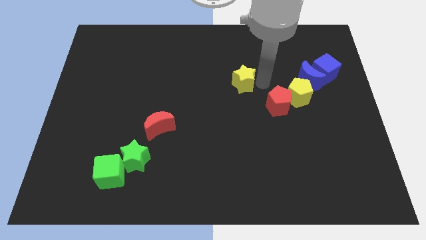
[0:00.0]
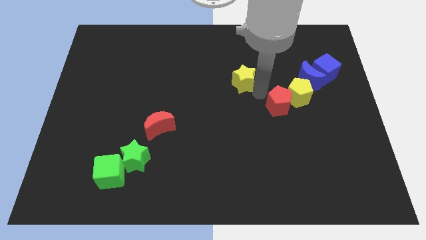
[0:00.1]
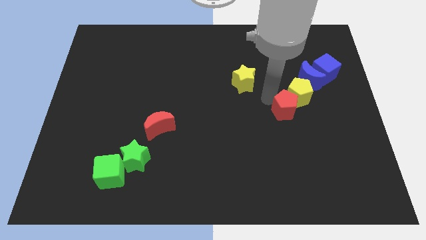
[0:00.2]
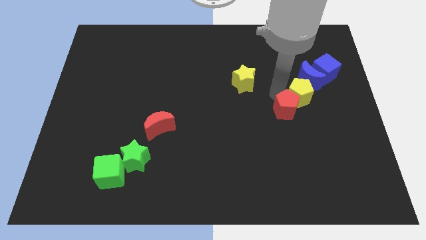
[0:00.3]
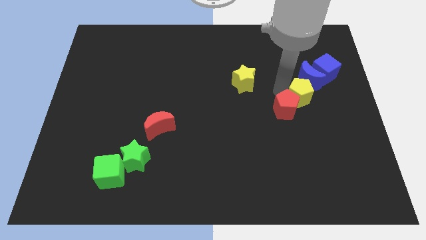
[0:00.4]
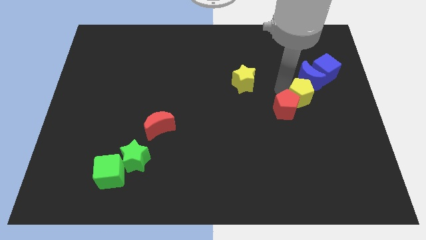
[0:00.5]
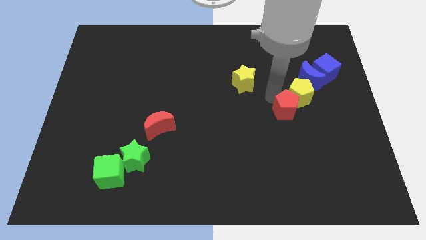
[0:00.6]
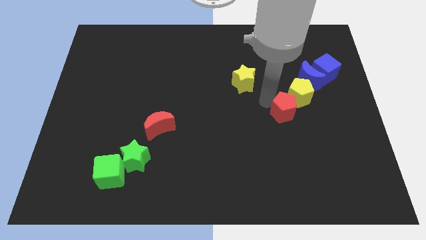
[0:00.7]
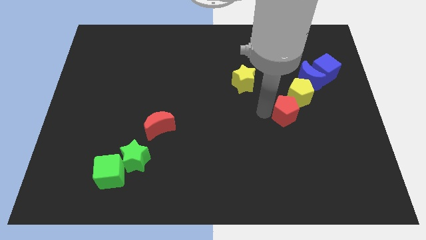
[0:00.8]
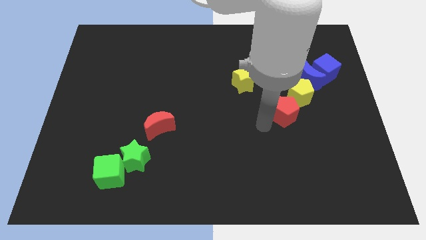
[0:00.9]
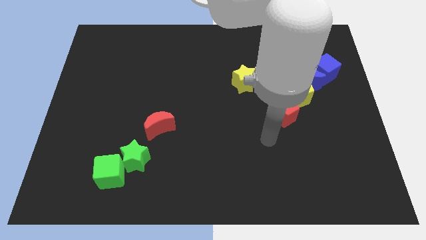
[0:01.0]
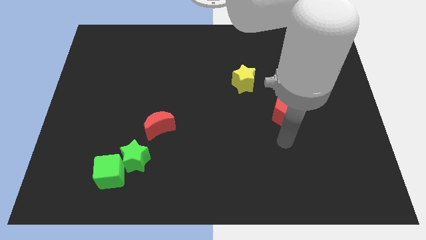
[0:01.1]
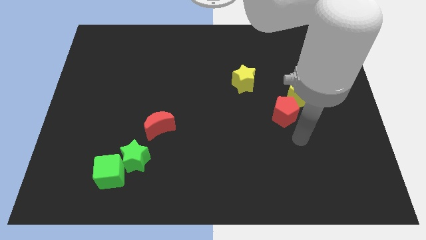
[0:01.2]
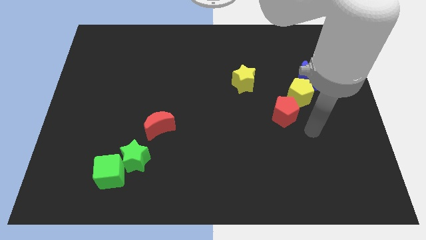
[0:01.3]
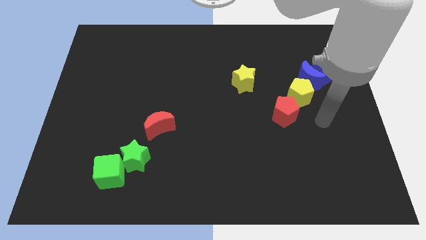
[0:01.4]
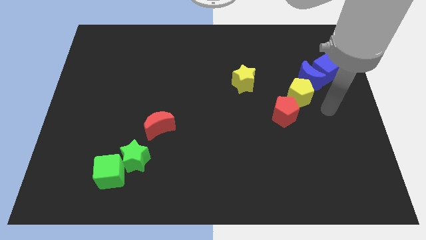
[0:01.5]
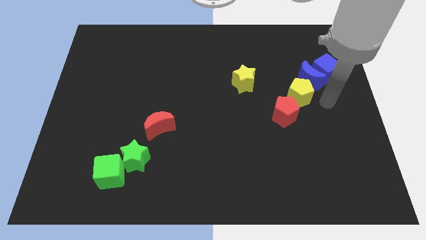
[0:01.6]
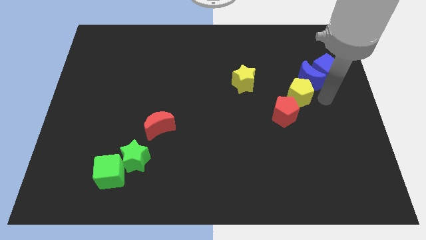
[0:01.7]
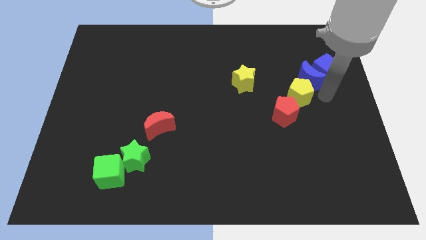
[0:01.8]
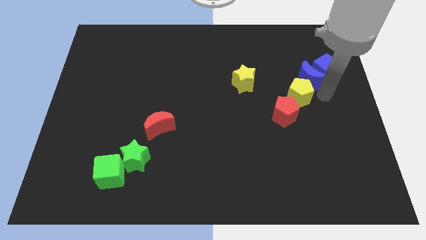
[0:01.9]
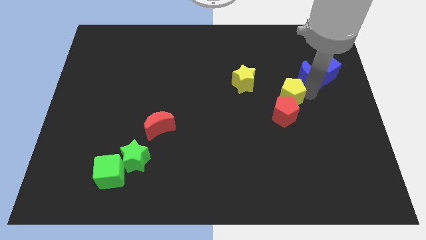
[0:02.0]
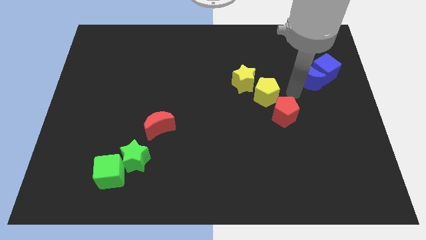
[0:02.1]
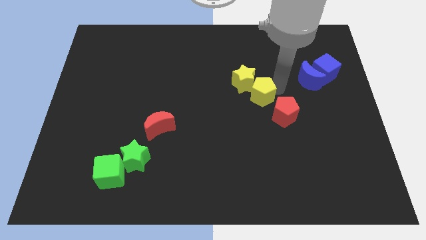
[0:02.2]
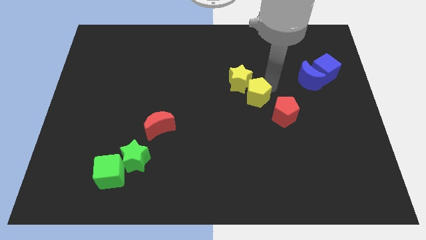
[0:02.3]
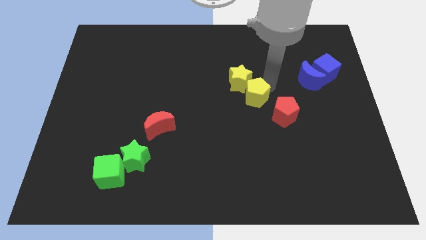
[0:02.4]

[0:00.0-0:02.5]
adjust the yellow and red pentagons to the bottom right of the yellow star

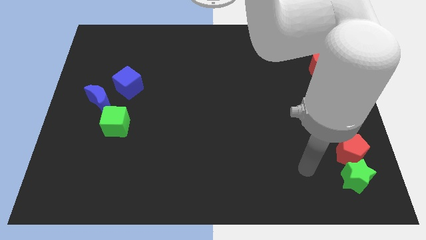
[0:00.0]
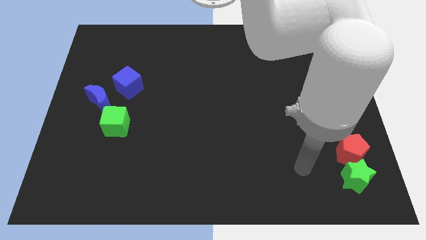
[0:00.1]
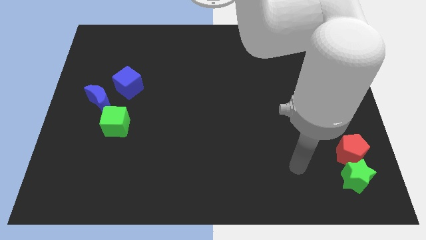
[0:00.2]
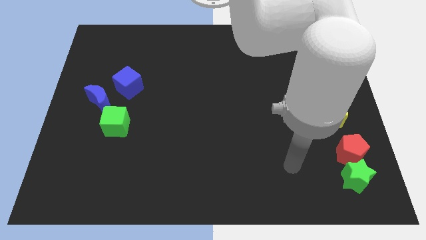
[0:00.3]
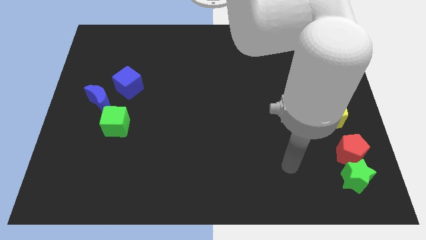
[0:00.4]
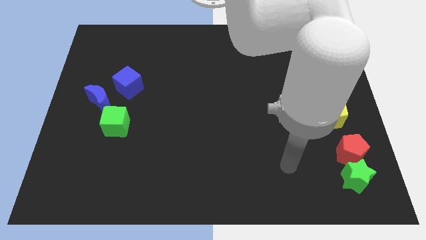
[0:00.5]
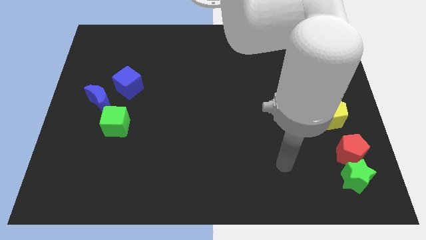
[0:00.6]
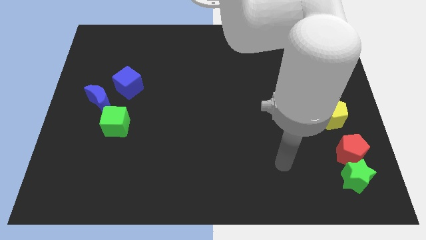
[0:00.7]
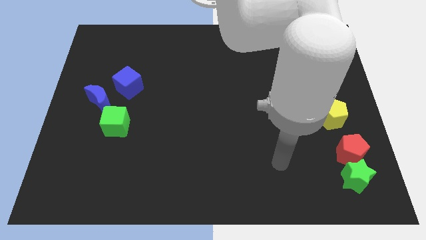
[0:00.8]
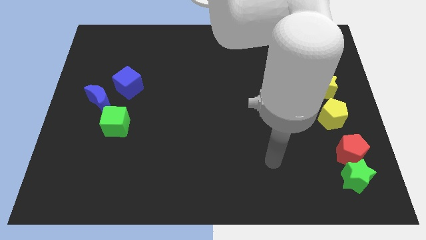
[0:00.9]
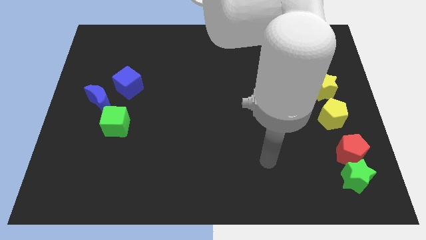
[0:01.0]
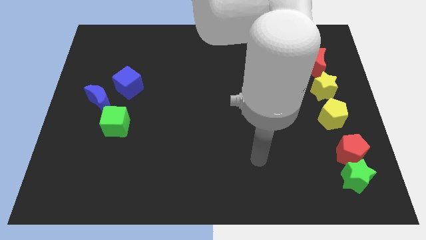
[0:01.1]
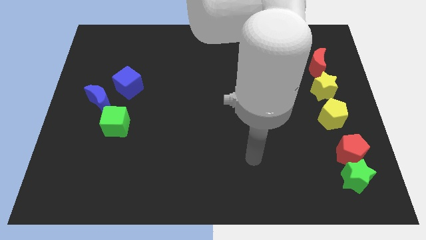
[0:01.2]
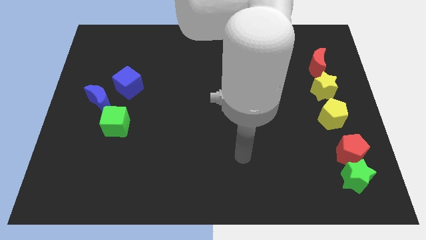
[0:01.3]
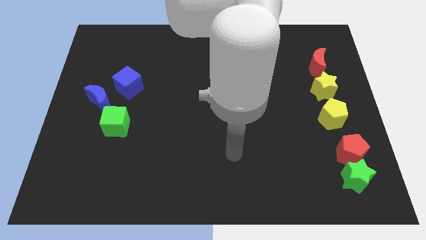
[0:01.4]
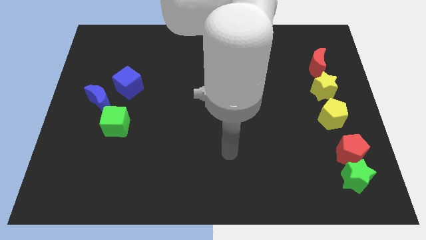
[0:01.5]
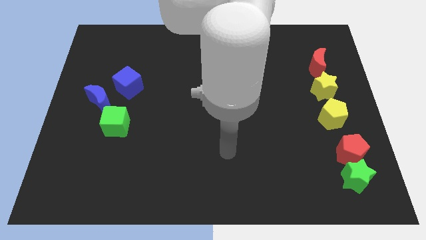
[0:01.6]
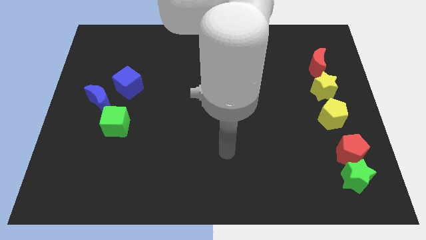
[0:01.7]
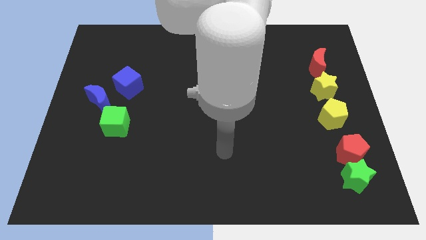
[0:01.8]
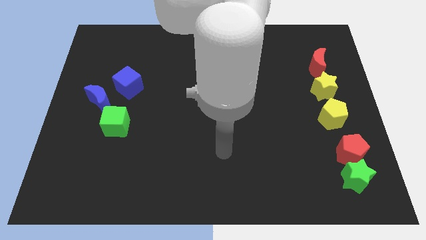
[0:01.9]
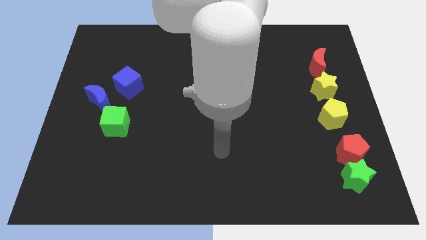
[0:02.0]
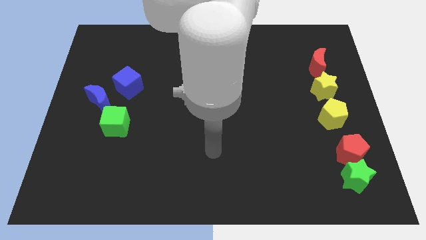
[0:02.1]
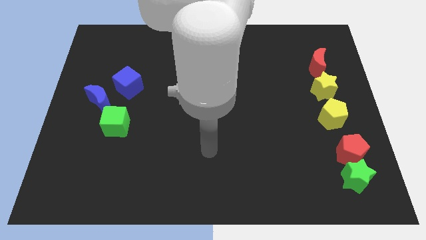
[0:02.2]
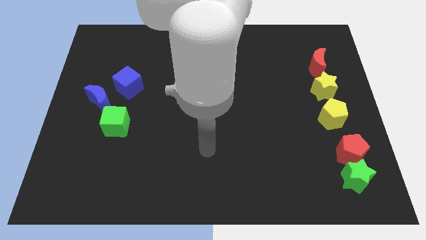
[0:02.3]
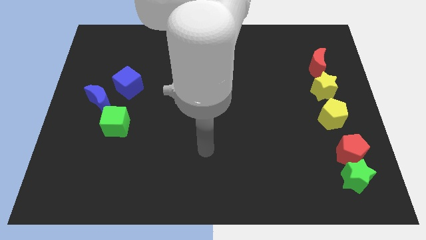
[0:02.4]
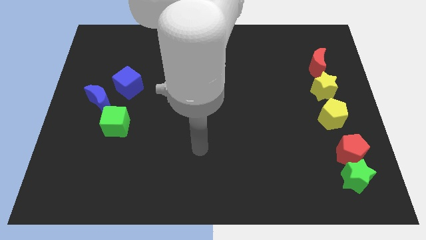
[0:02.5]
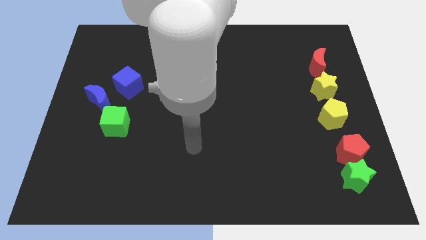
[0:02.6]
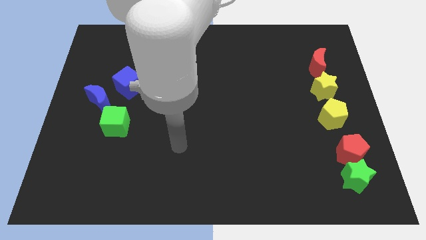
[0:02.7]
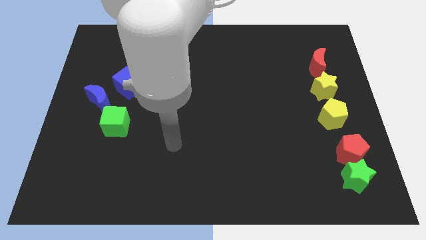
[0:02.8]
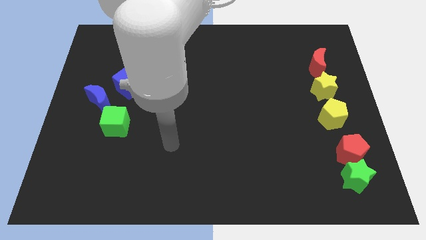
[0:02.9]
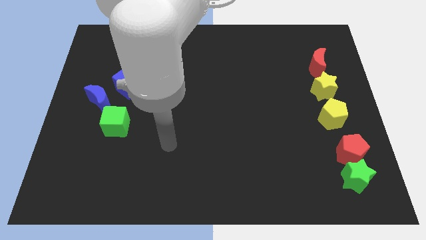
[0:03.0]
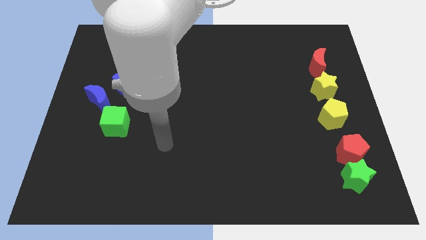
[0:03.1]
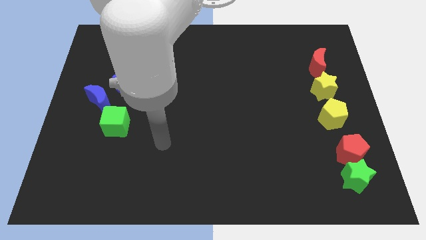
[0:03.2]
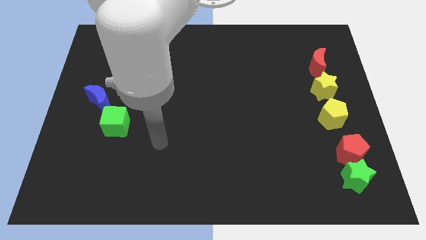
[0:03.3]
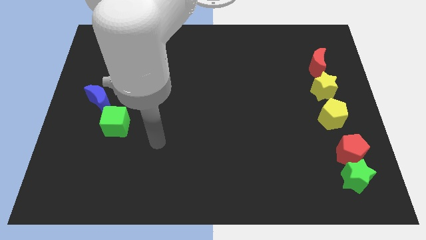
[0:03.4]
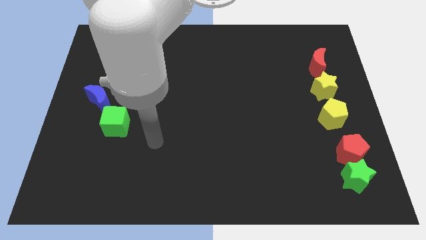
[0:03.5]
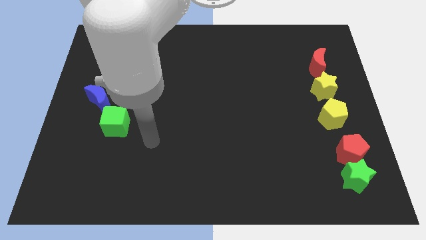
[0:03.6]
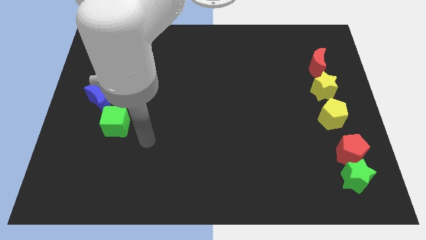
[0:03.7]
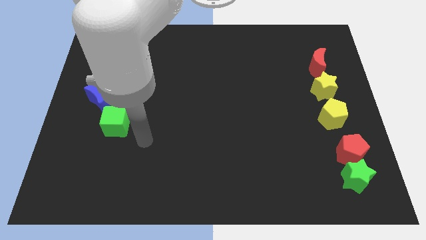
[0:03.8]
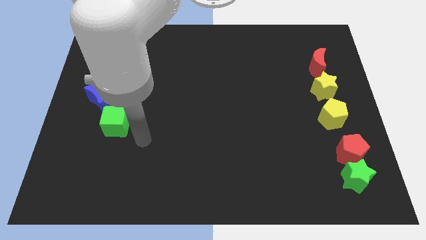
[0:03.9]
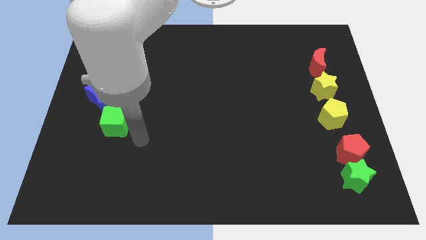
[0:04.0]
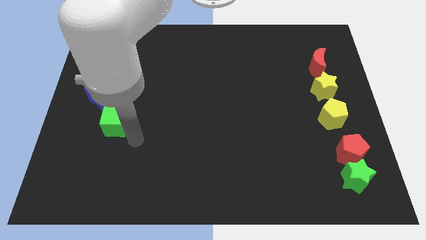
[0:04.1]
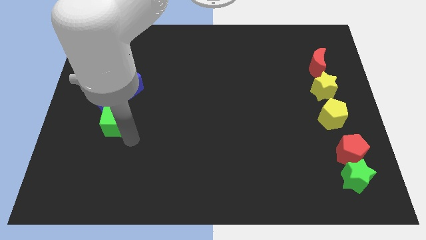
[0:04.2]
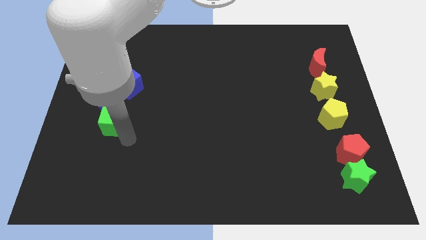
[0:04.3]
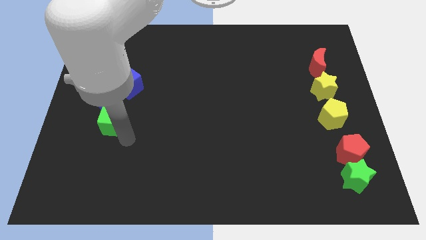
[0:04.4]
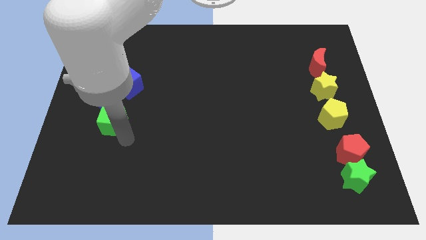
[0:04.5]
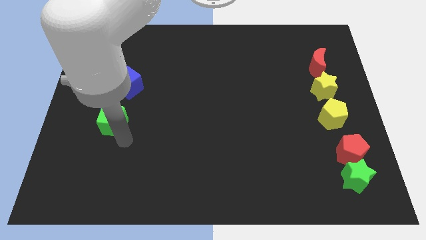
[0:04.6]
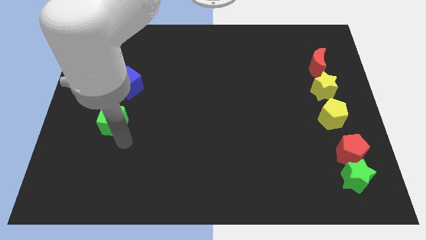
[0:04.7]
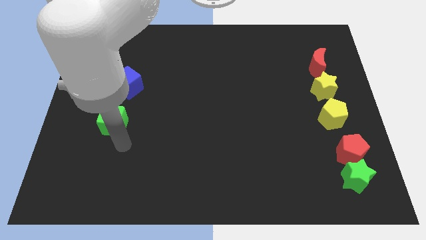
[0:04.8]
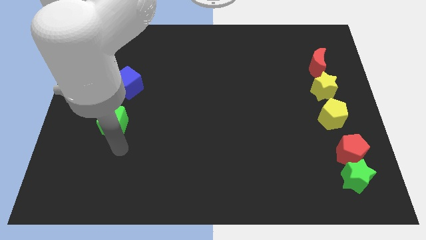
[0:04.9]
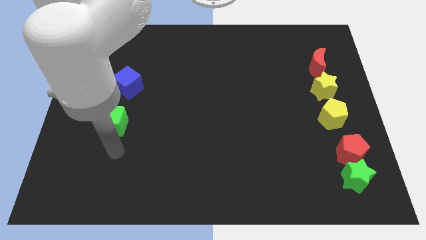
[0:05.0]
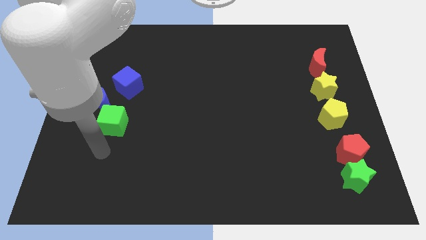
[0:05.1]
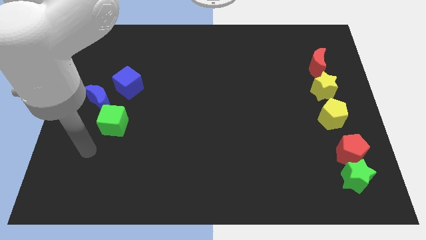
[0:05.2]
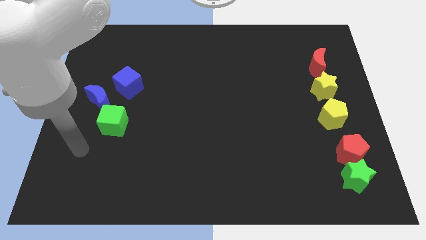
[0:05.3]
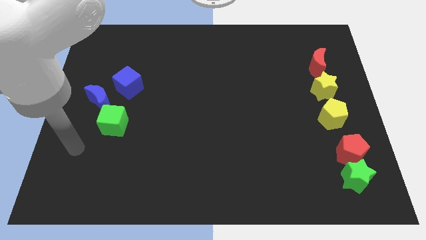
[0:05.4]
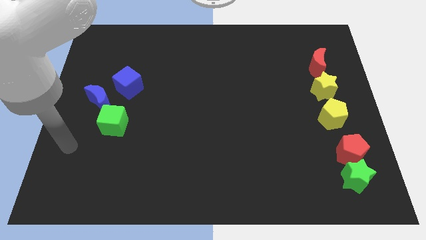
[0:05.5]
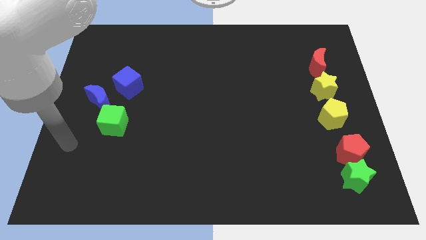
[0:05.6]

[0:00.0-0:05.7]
slightly push the green cube to the left of the board

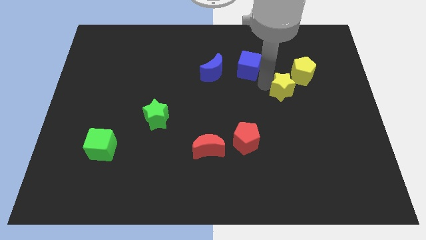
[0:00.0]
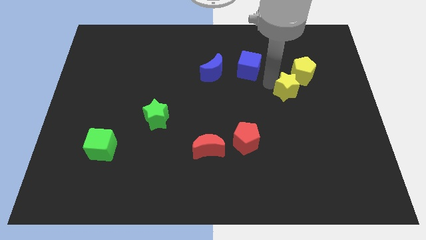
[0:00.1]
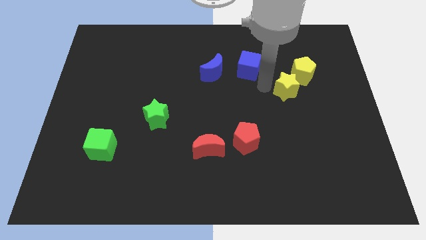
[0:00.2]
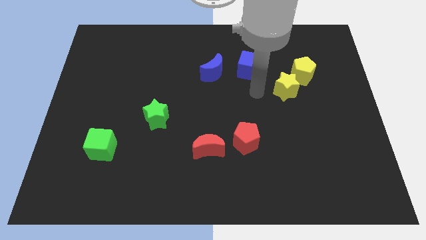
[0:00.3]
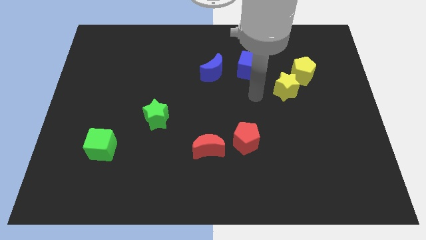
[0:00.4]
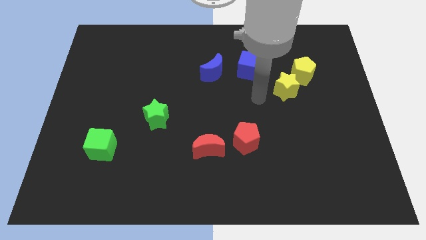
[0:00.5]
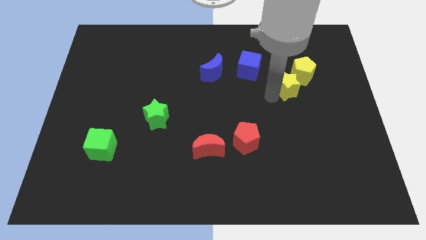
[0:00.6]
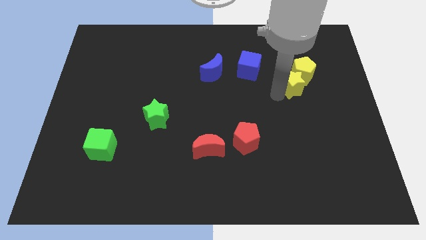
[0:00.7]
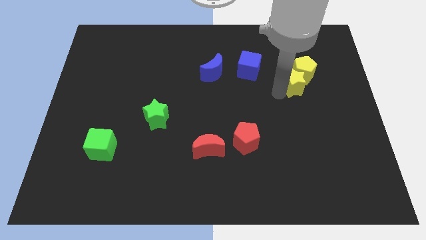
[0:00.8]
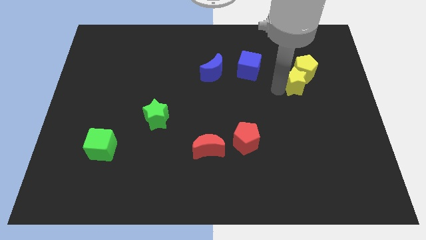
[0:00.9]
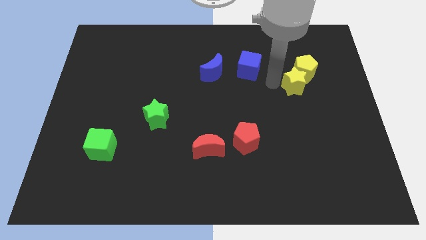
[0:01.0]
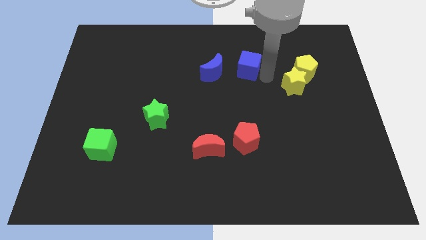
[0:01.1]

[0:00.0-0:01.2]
push the yellow star into the yellow pentagon
